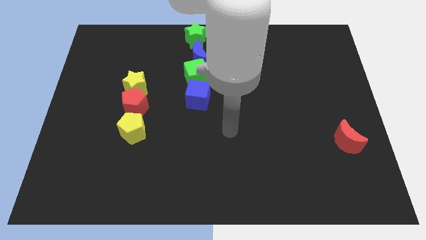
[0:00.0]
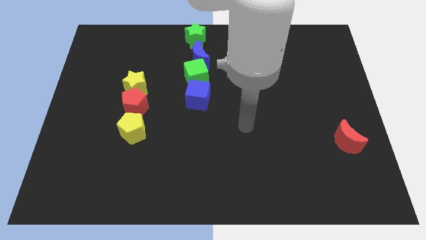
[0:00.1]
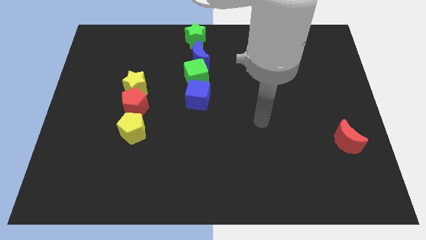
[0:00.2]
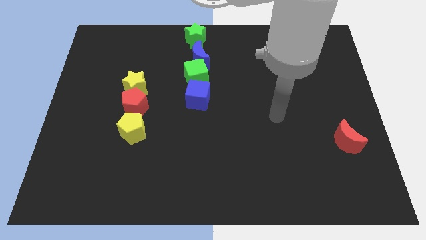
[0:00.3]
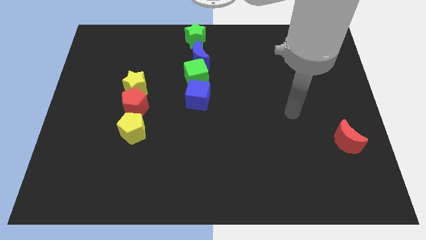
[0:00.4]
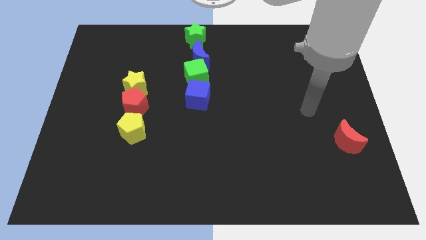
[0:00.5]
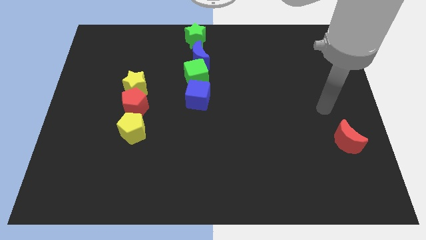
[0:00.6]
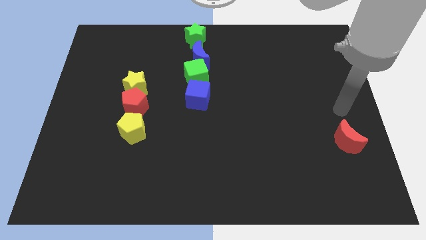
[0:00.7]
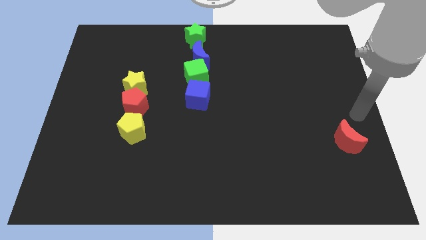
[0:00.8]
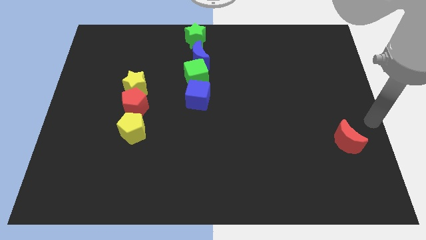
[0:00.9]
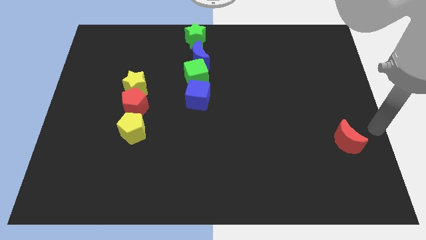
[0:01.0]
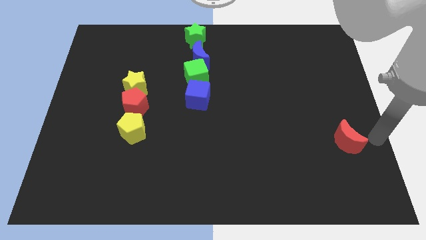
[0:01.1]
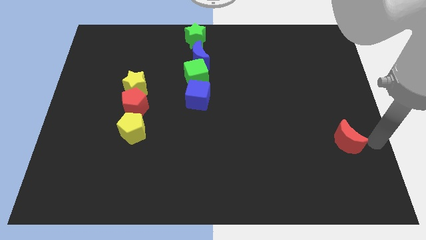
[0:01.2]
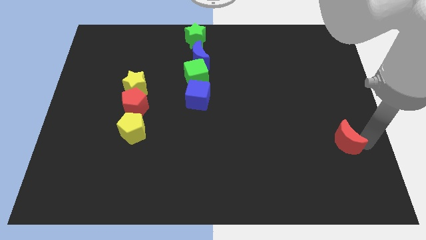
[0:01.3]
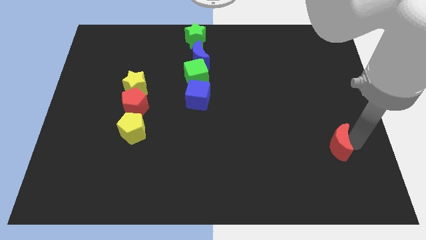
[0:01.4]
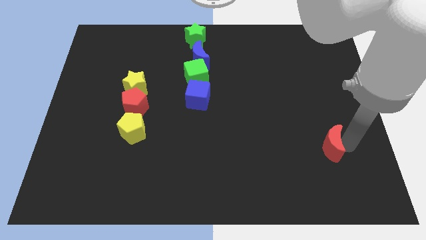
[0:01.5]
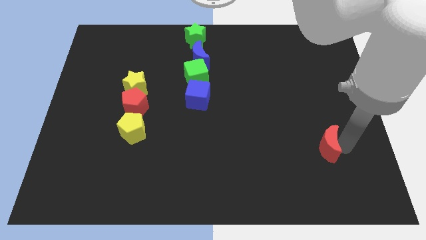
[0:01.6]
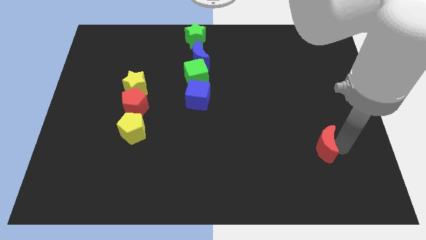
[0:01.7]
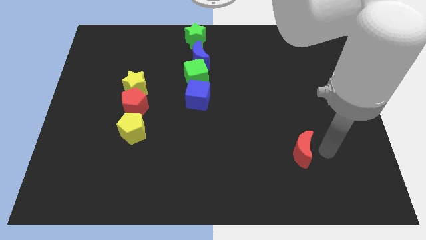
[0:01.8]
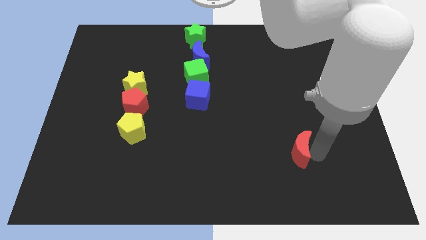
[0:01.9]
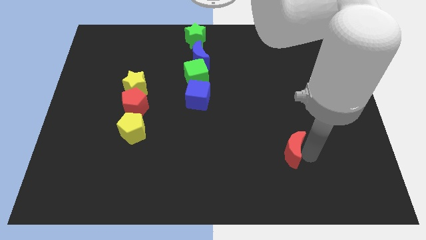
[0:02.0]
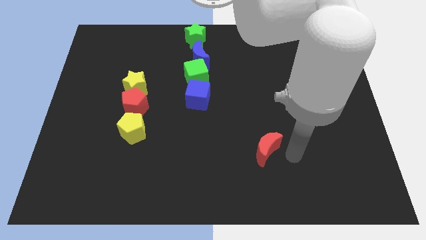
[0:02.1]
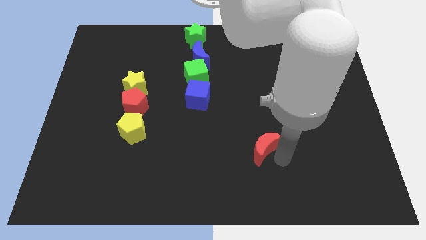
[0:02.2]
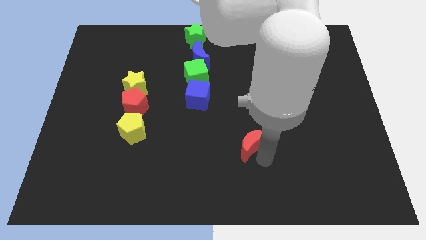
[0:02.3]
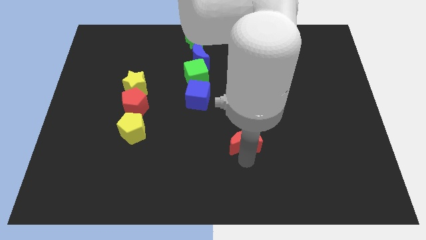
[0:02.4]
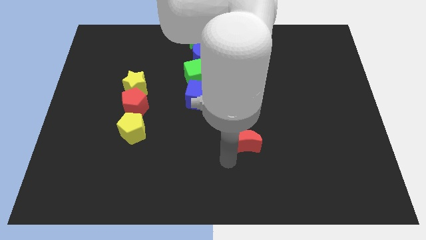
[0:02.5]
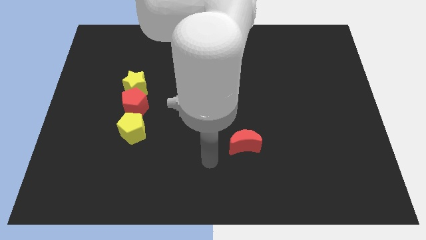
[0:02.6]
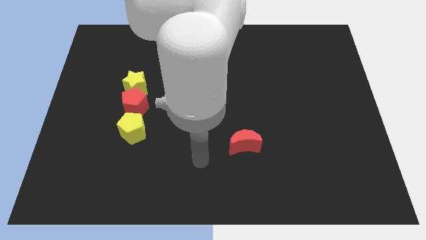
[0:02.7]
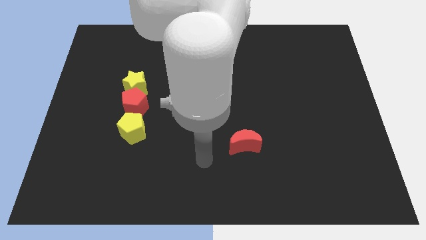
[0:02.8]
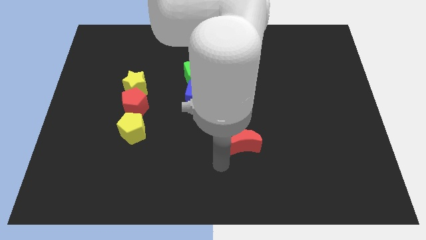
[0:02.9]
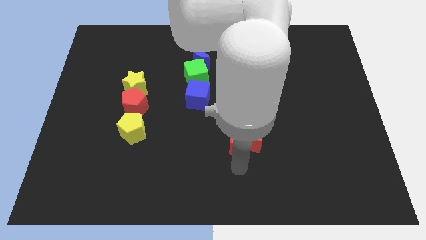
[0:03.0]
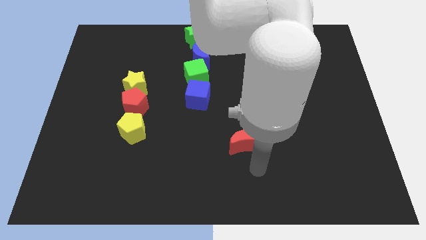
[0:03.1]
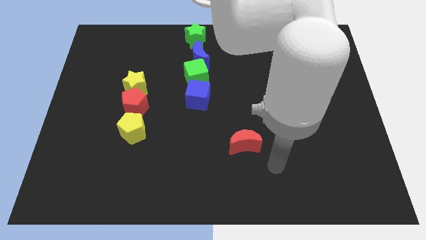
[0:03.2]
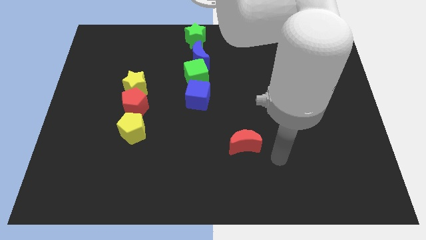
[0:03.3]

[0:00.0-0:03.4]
place the red moon to the bottom center

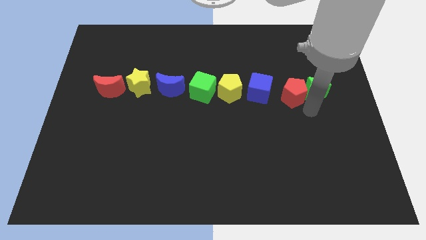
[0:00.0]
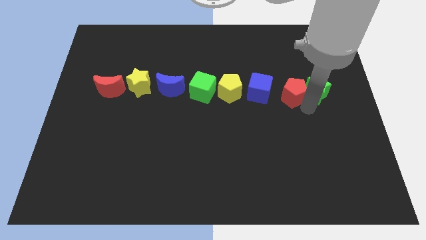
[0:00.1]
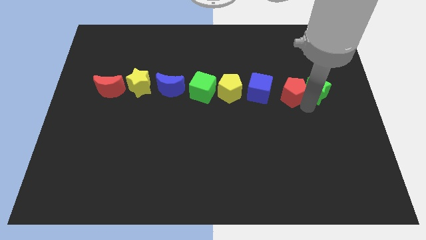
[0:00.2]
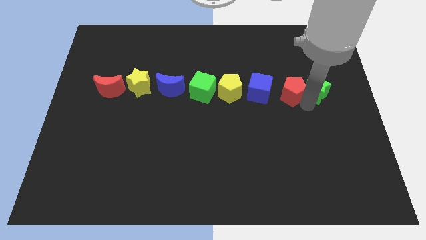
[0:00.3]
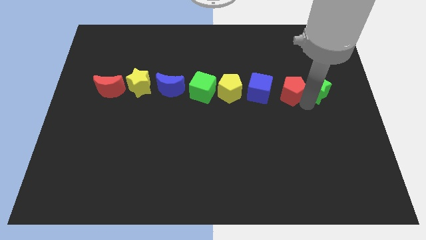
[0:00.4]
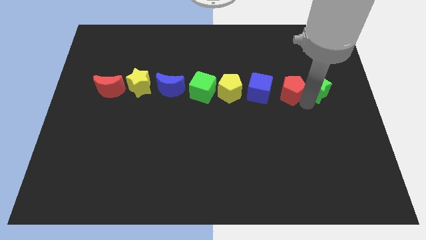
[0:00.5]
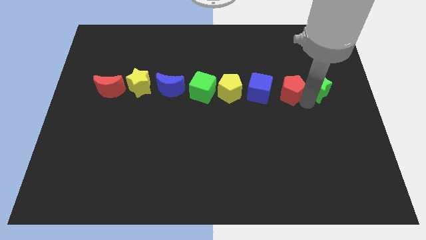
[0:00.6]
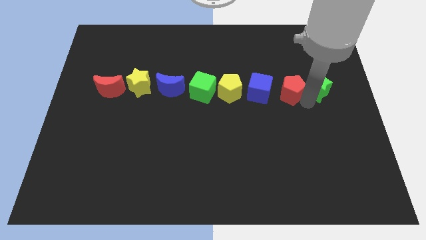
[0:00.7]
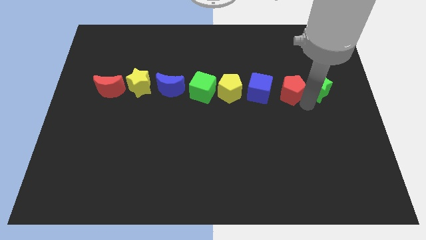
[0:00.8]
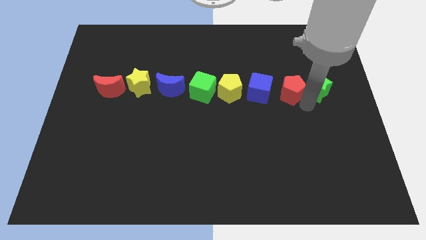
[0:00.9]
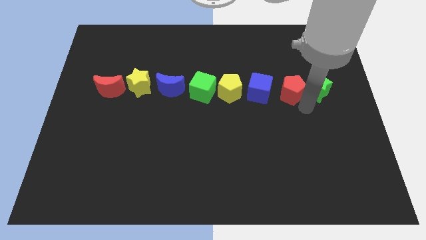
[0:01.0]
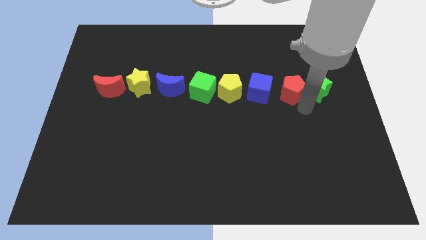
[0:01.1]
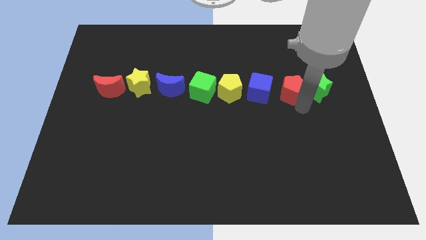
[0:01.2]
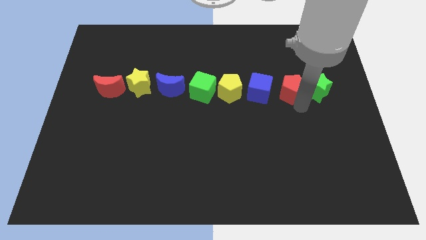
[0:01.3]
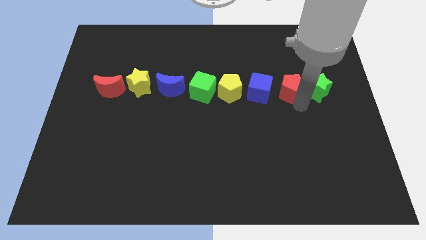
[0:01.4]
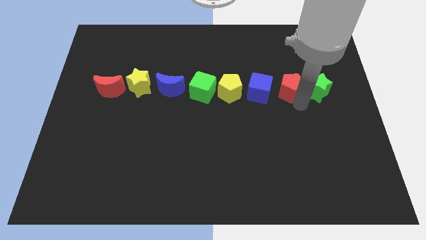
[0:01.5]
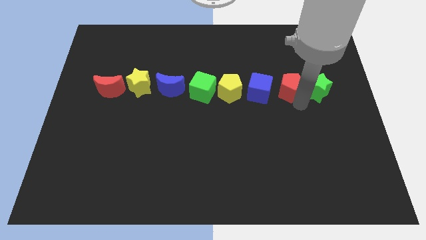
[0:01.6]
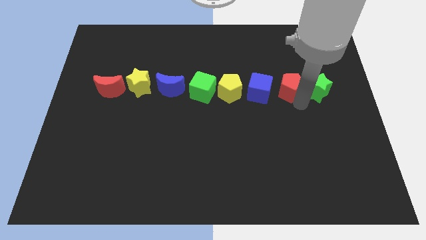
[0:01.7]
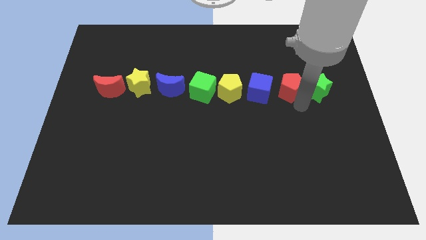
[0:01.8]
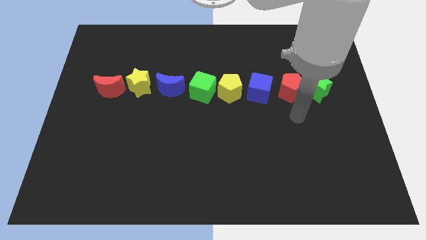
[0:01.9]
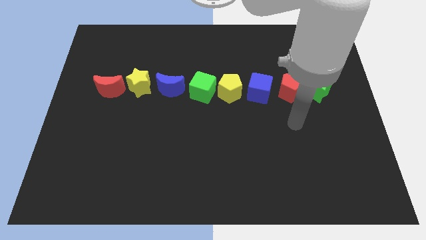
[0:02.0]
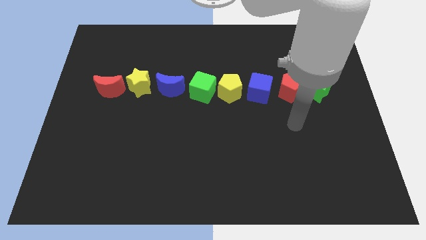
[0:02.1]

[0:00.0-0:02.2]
place the green star to the right of the red pentagon to form a horizontal line

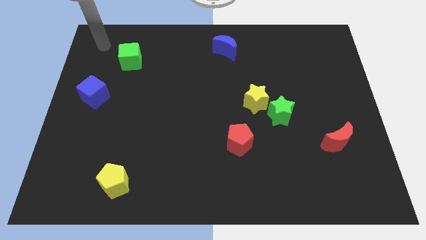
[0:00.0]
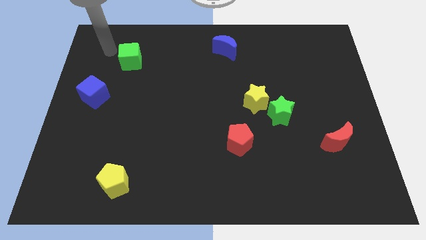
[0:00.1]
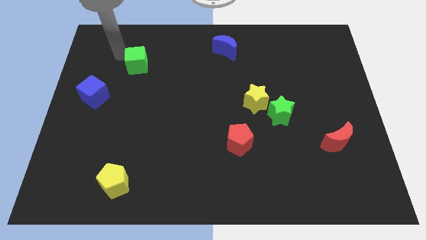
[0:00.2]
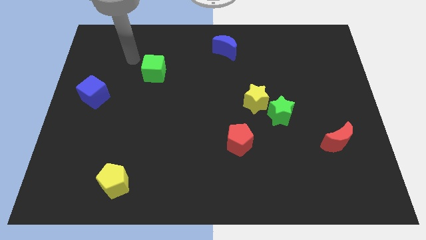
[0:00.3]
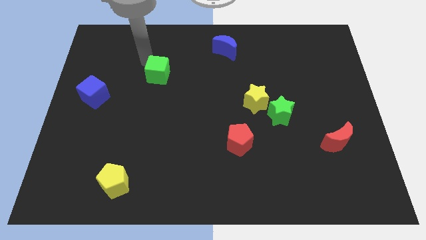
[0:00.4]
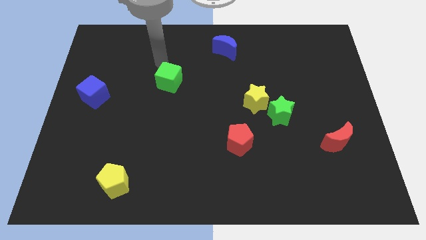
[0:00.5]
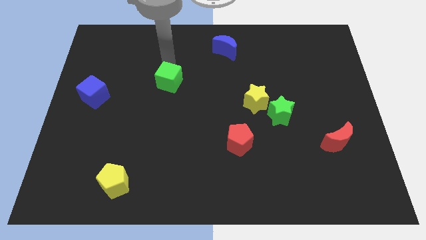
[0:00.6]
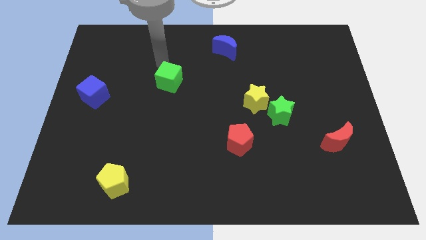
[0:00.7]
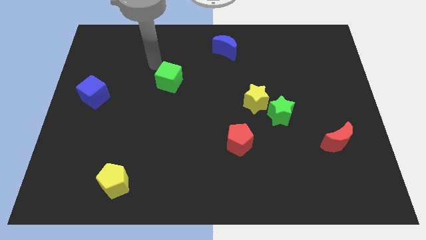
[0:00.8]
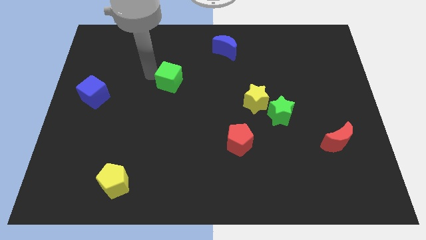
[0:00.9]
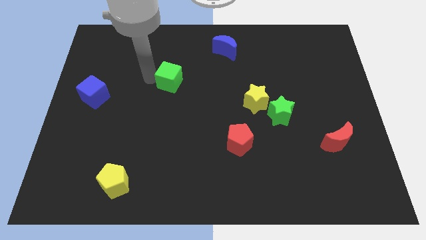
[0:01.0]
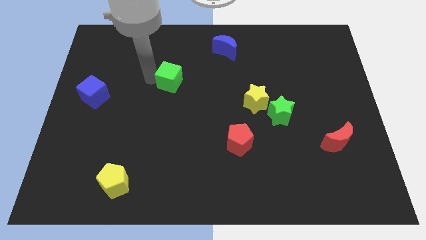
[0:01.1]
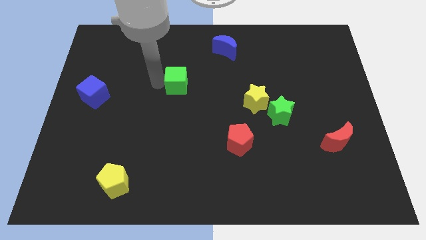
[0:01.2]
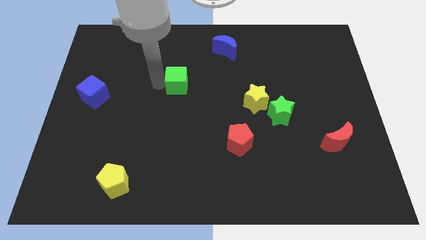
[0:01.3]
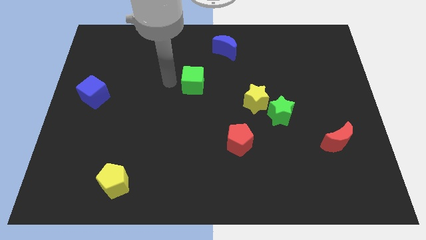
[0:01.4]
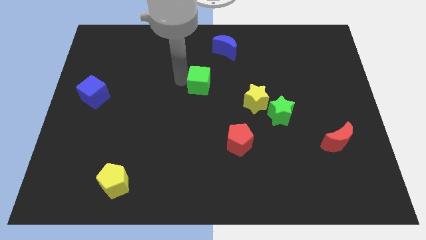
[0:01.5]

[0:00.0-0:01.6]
push the green cube to the right side of the table

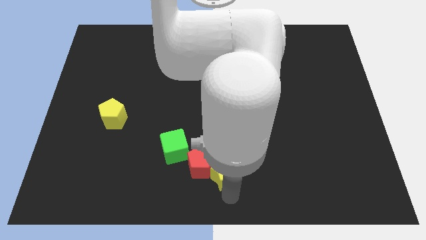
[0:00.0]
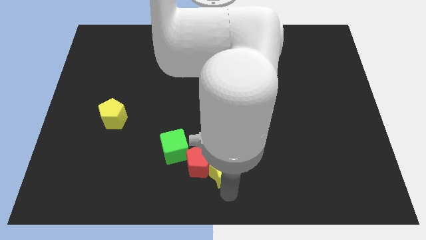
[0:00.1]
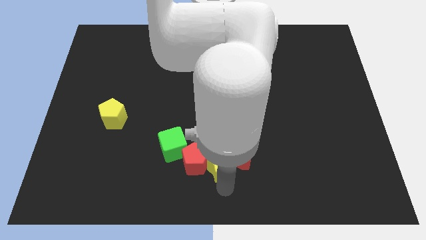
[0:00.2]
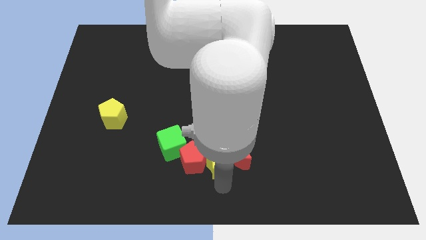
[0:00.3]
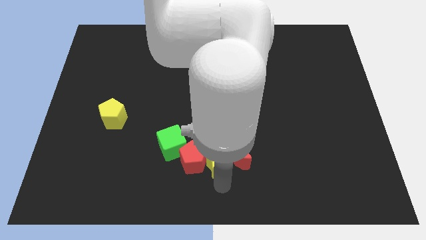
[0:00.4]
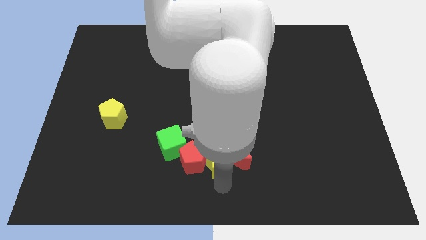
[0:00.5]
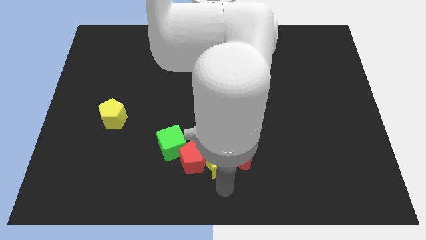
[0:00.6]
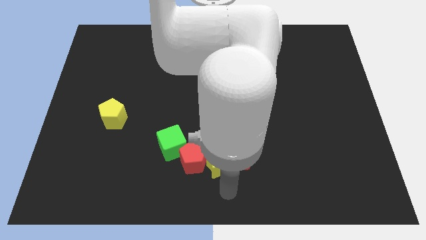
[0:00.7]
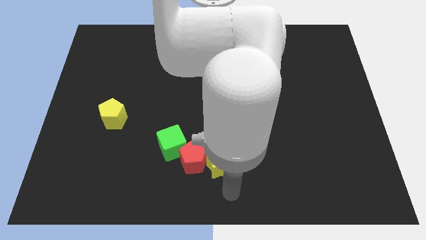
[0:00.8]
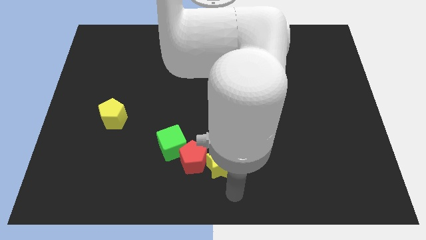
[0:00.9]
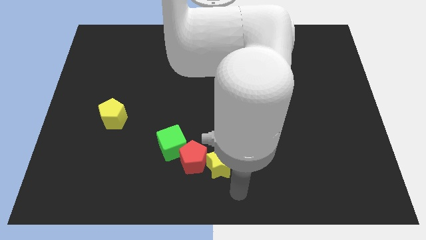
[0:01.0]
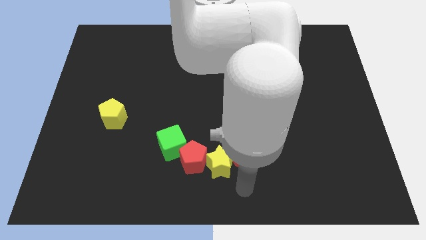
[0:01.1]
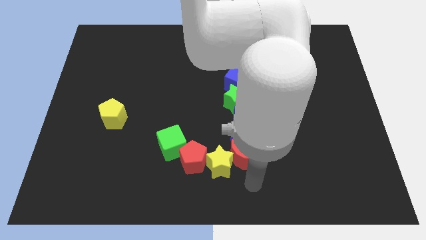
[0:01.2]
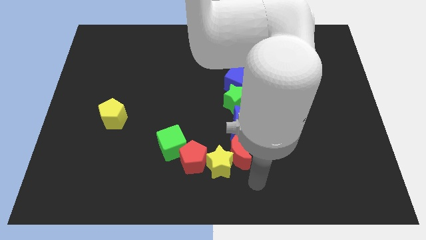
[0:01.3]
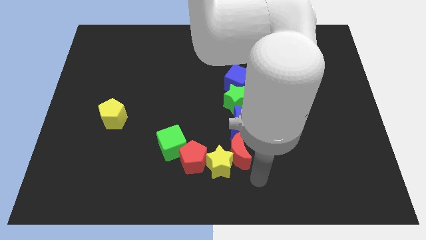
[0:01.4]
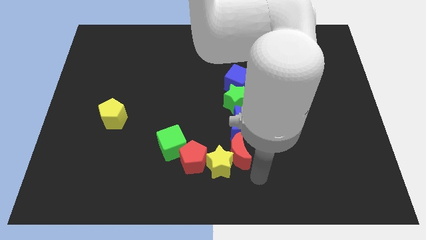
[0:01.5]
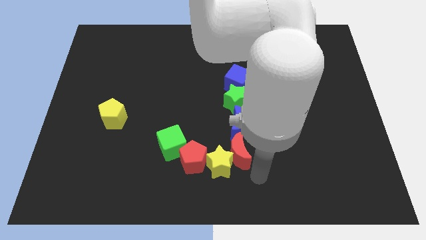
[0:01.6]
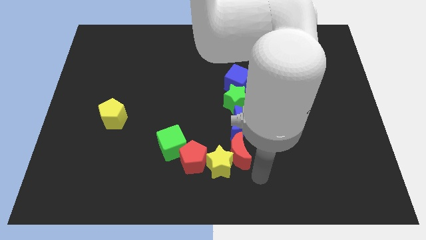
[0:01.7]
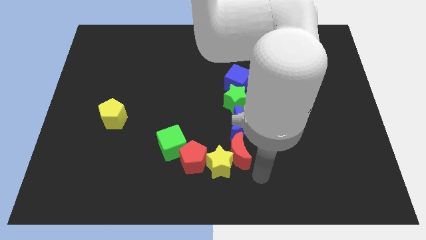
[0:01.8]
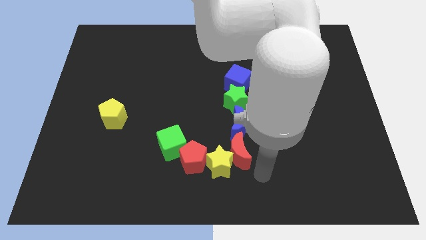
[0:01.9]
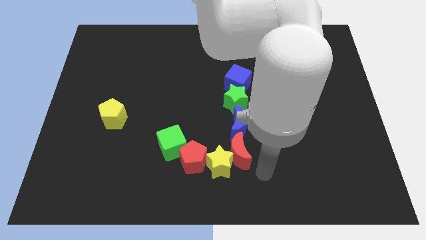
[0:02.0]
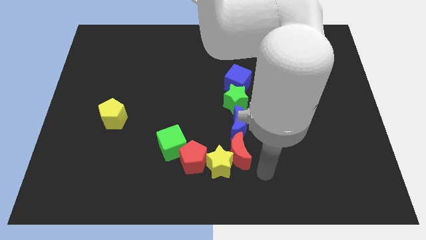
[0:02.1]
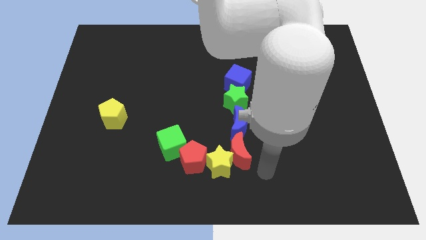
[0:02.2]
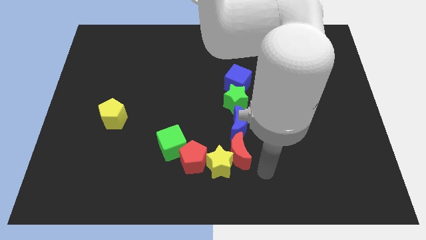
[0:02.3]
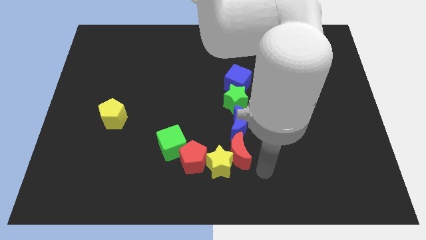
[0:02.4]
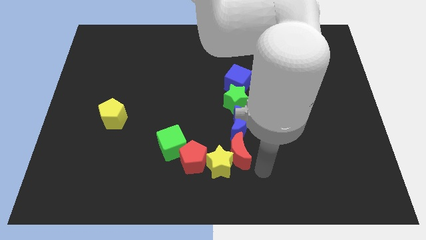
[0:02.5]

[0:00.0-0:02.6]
place your arm right to red moon
